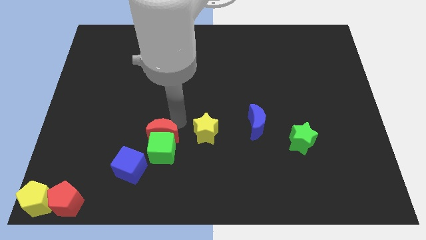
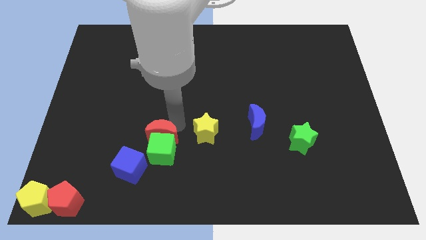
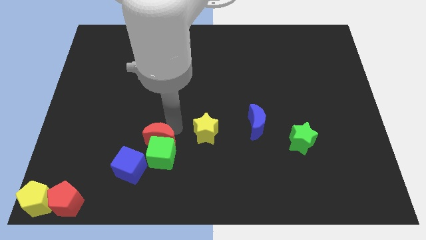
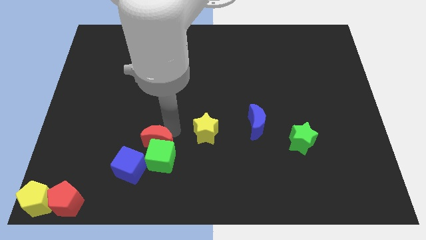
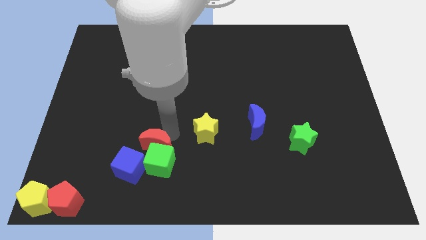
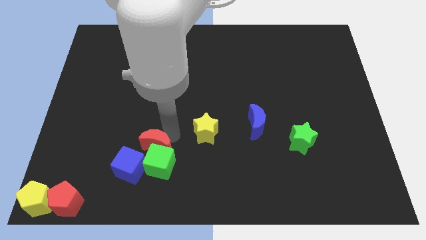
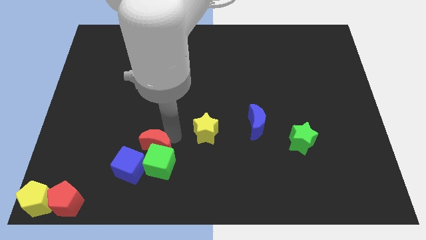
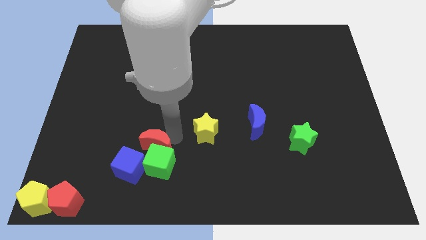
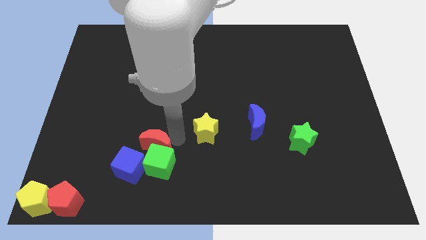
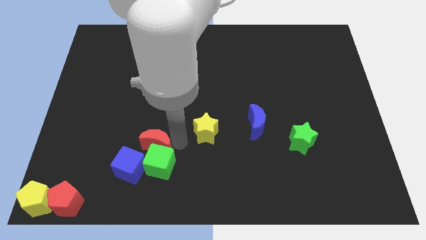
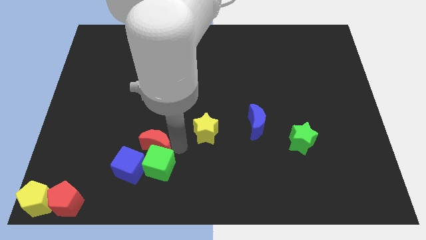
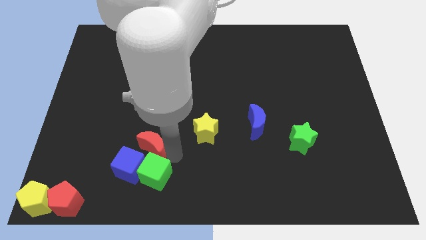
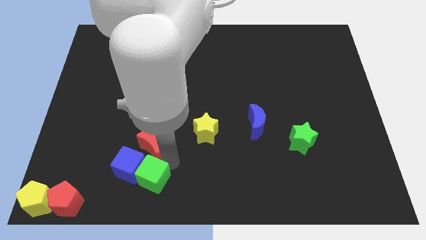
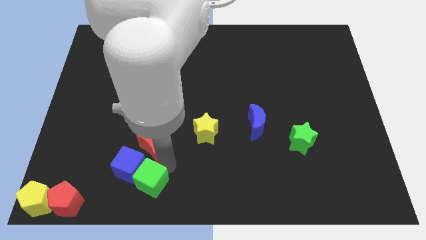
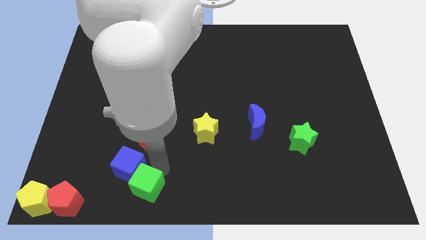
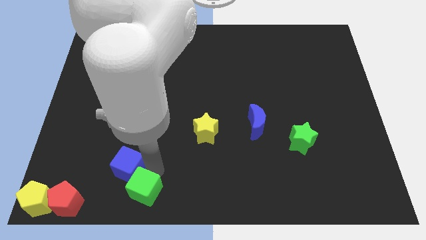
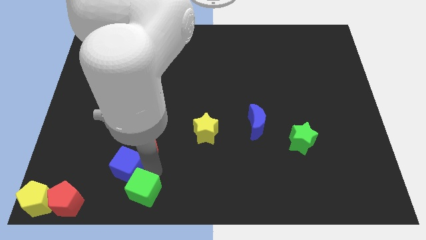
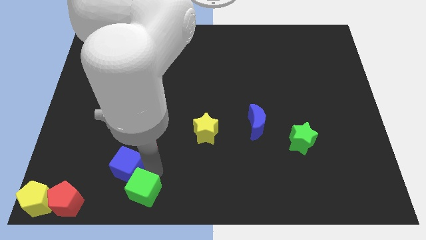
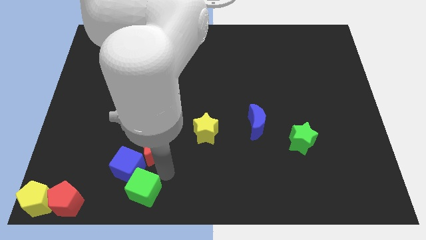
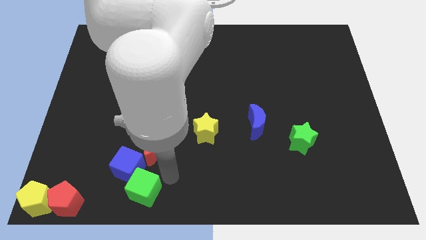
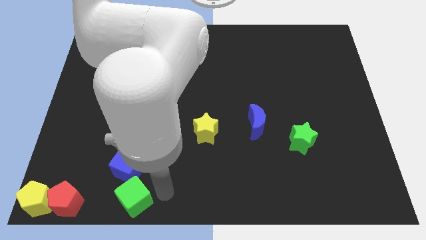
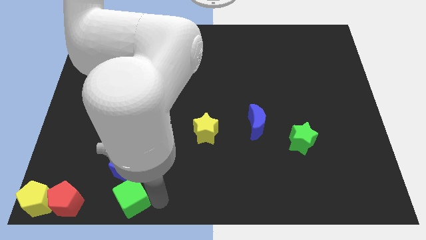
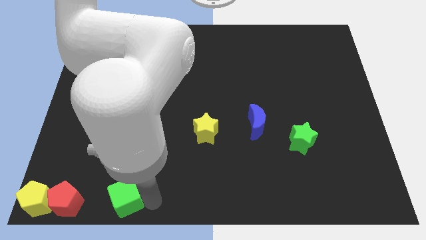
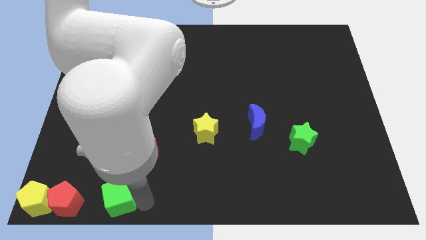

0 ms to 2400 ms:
move the green cube towards the bottom center

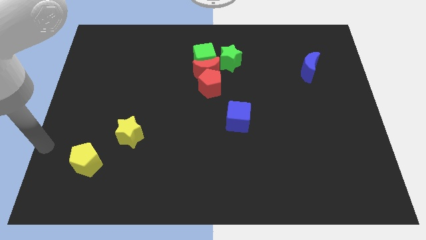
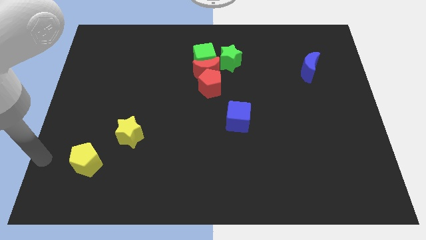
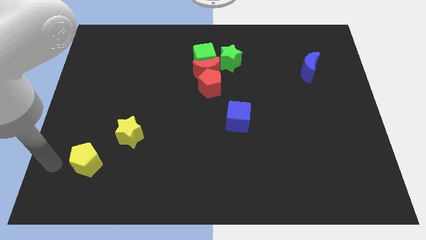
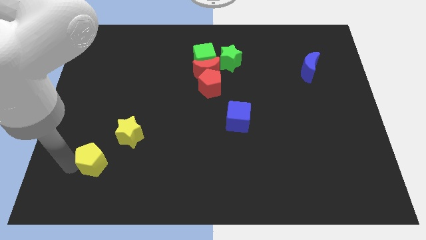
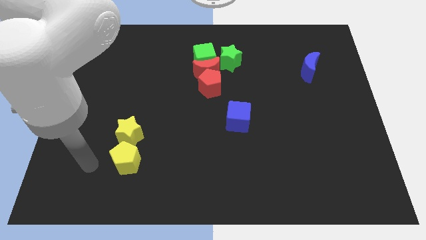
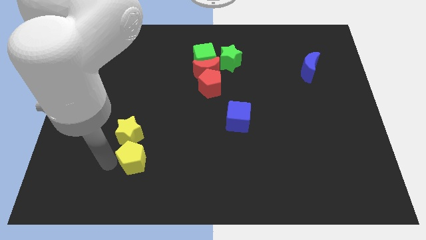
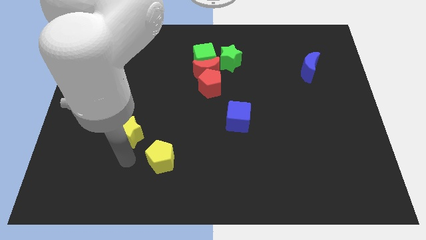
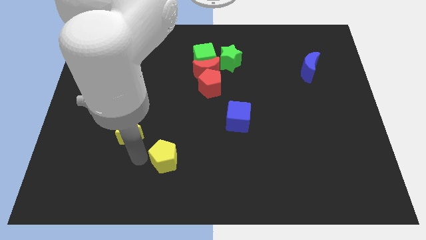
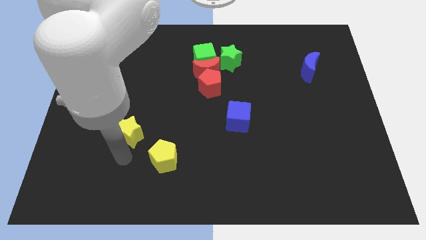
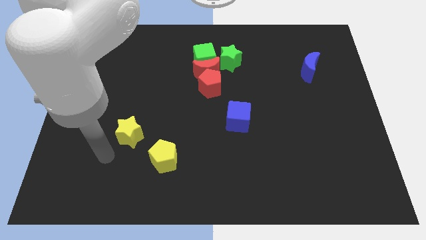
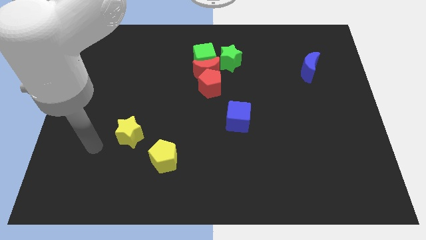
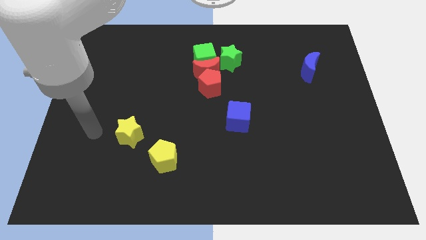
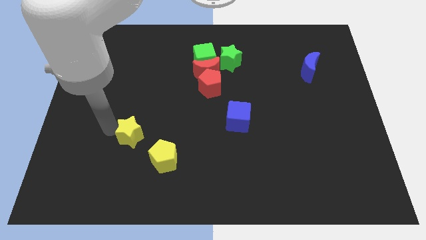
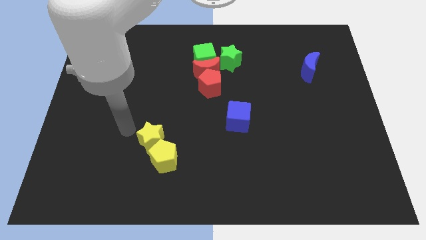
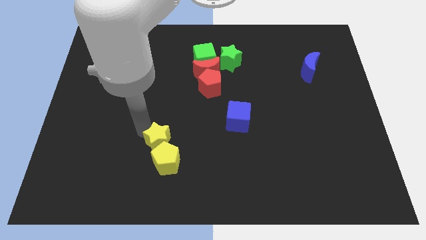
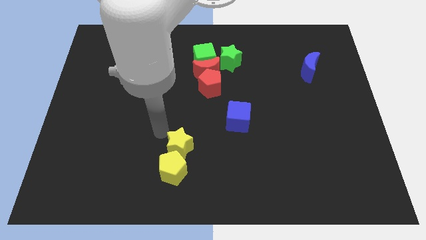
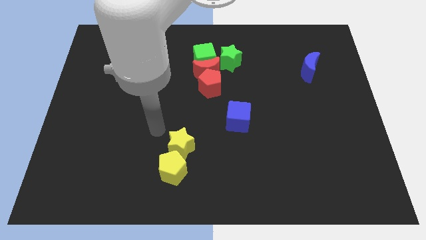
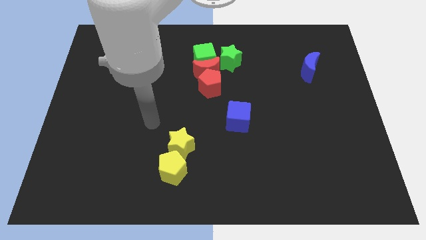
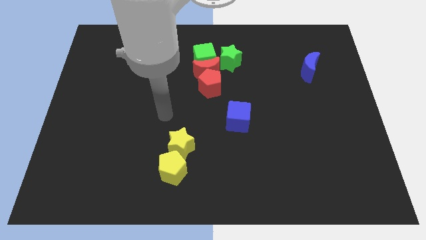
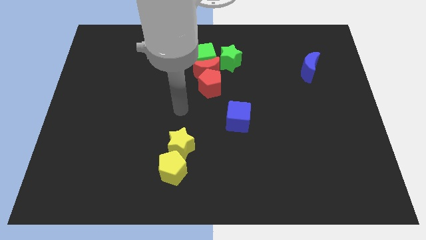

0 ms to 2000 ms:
push the yellow star and pentagon towards the bottom center of the board

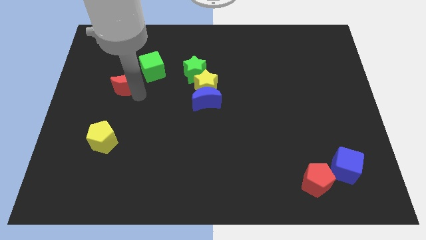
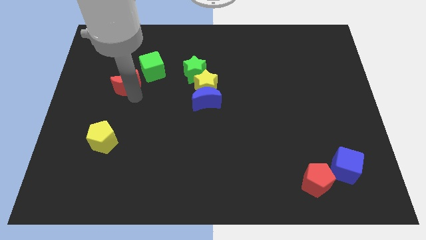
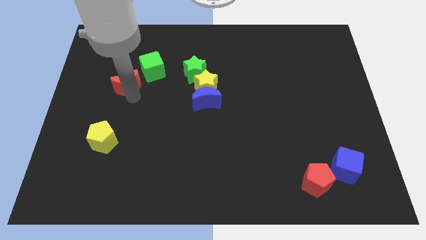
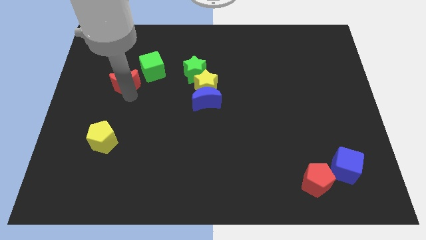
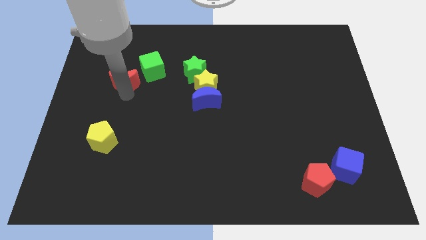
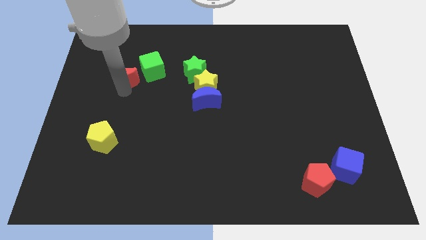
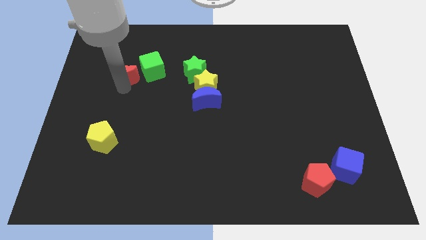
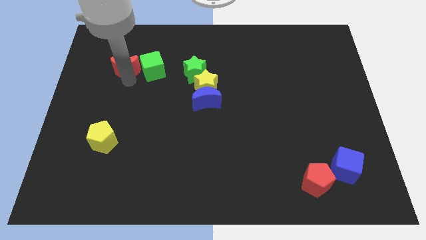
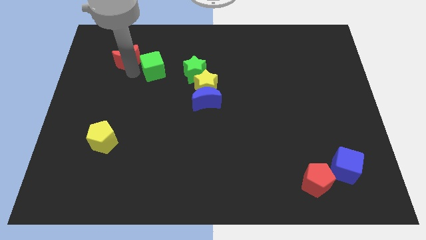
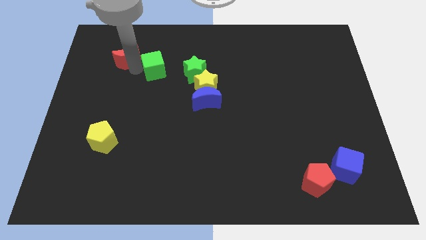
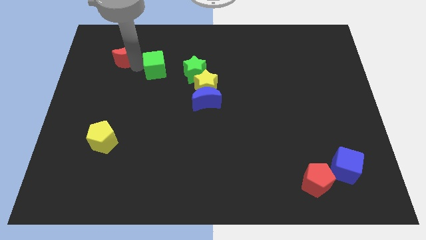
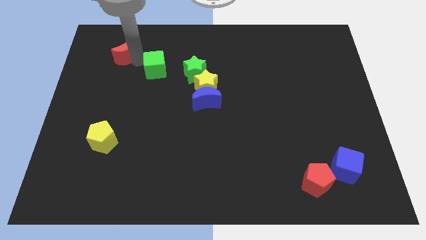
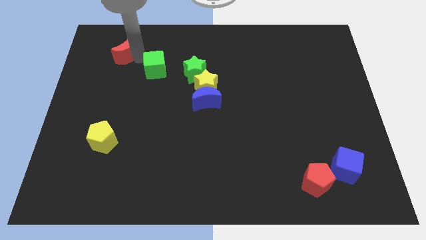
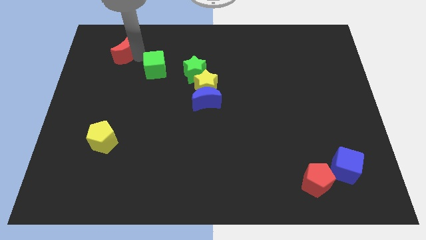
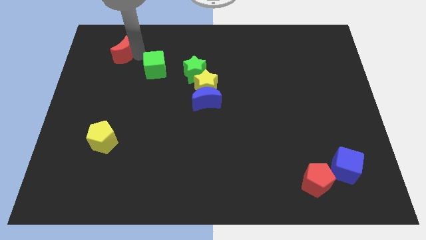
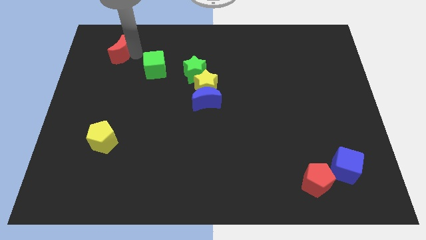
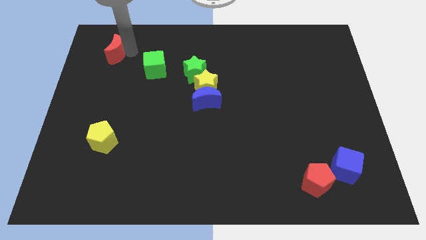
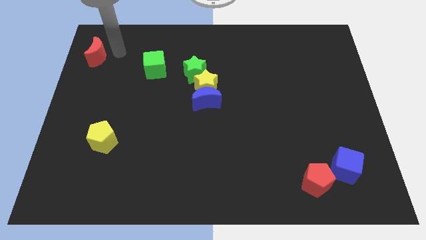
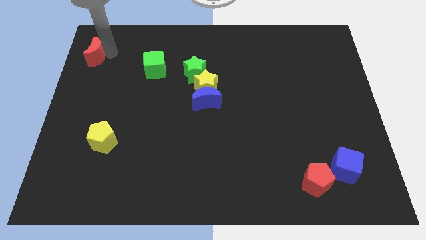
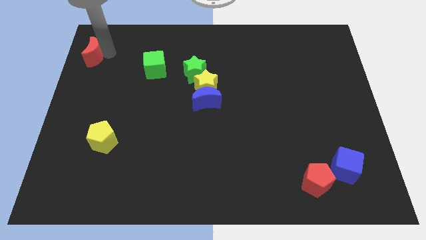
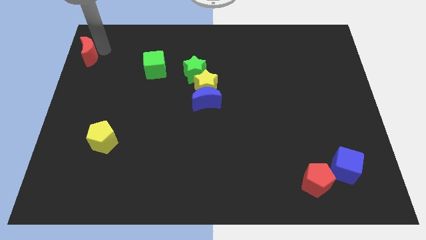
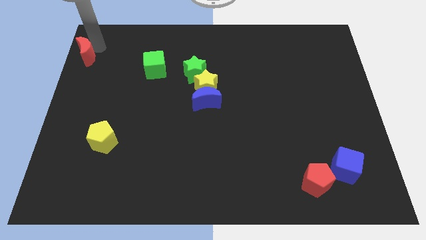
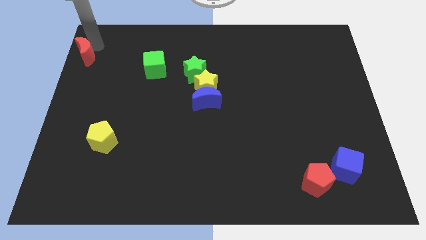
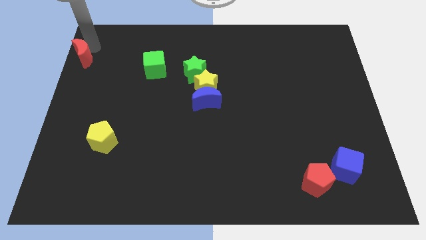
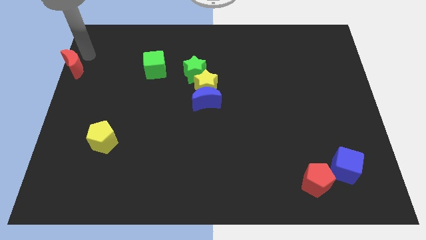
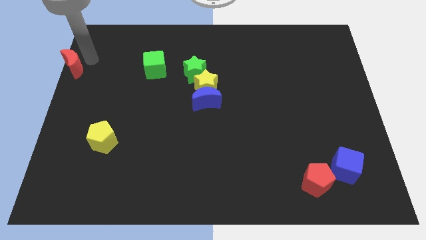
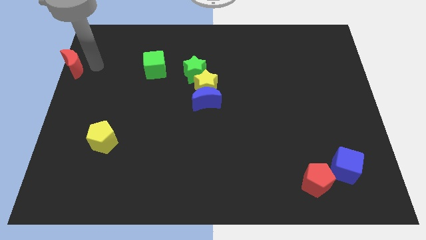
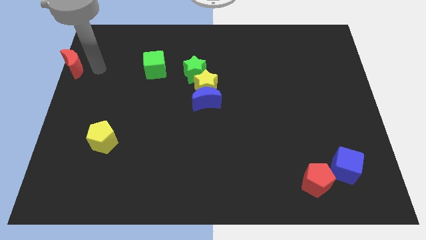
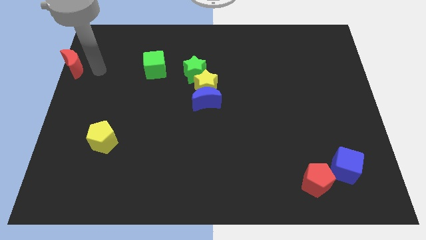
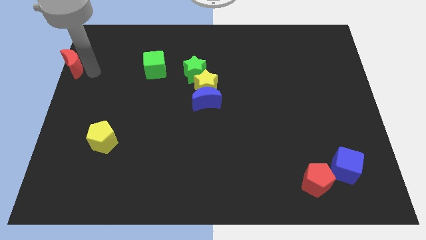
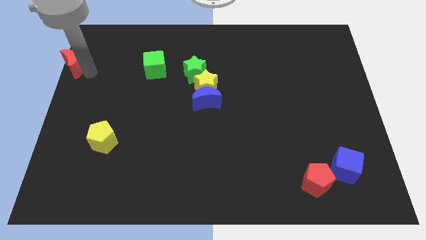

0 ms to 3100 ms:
move the red block towards the top left side

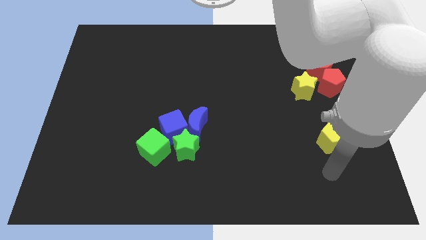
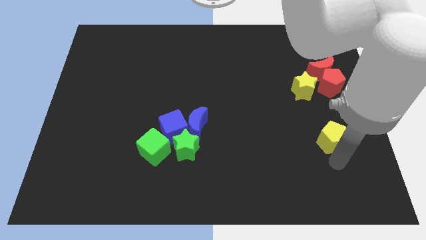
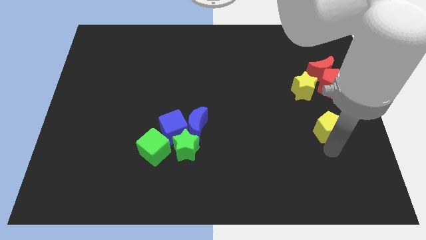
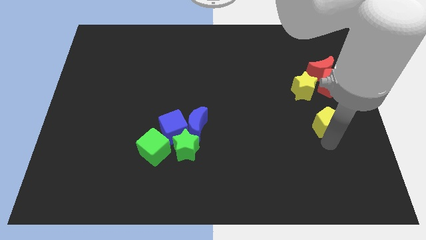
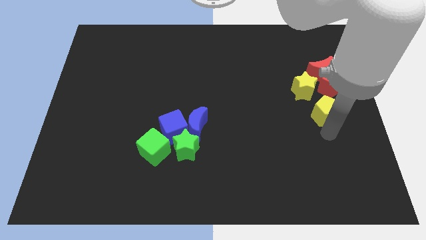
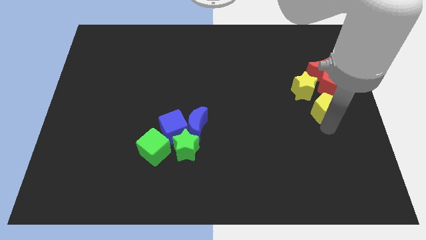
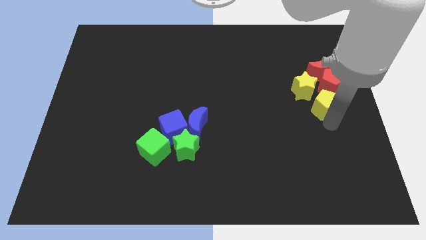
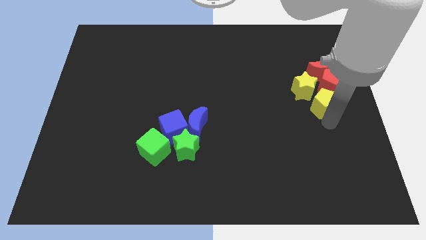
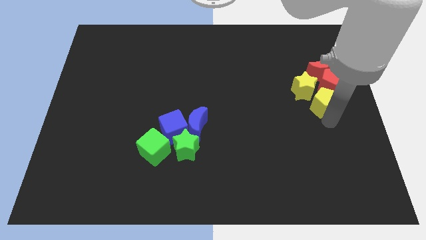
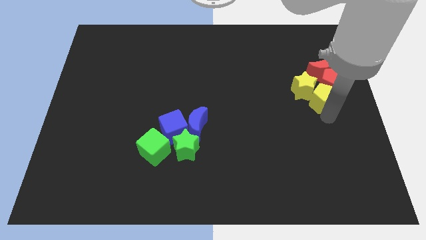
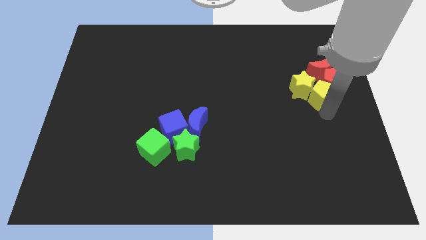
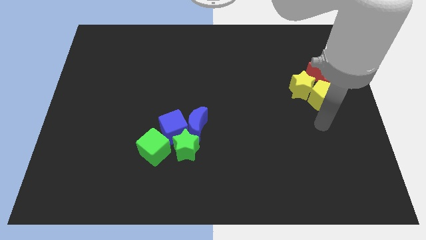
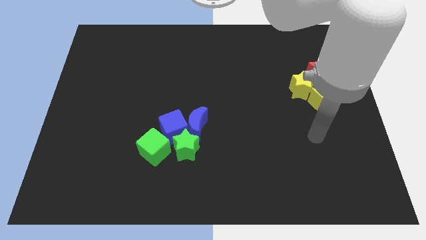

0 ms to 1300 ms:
push the yellow pentagon into the group of blocks

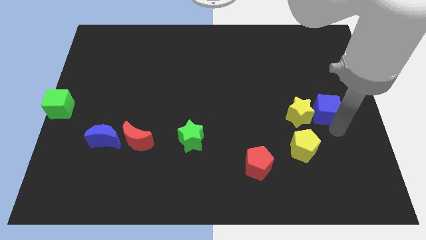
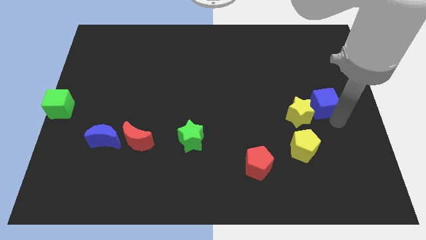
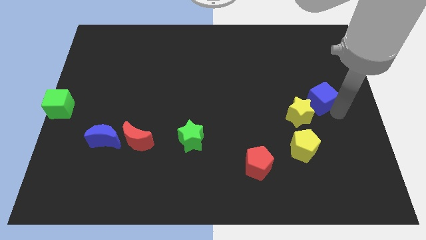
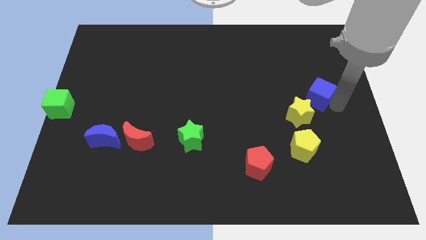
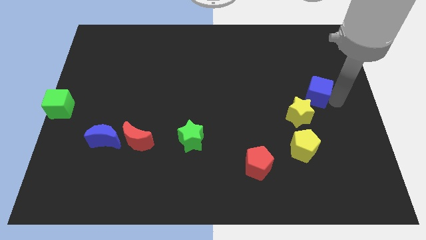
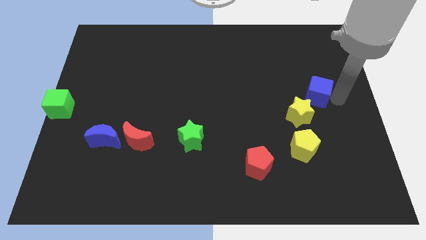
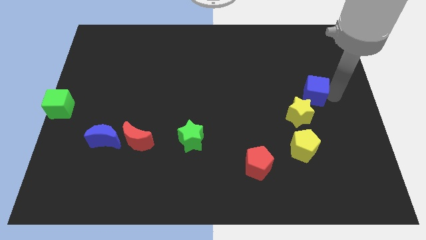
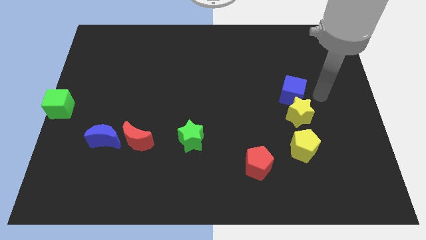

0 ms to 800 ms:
push the blue cube to the top of the yellow star
